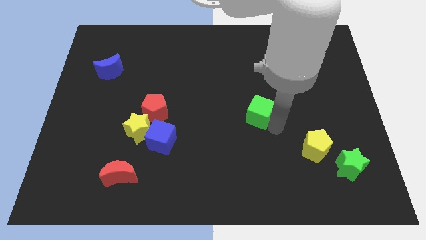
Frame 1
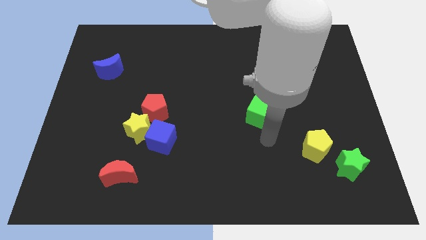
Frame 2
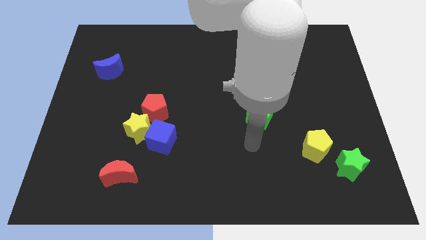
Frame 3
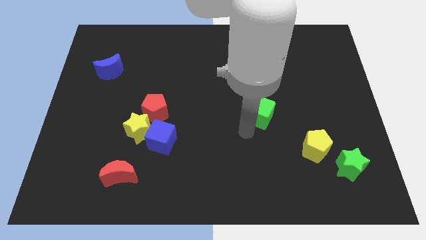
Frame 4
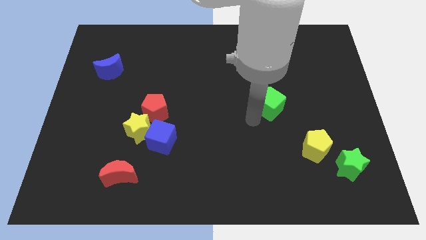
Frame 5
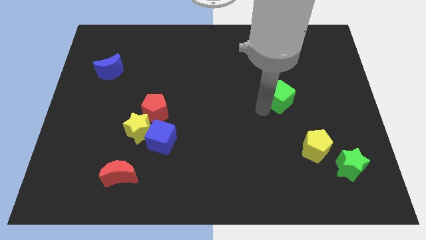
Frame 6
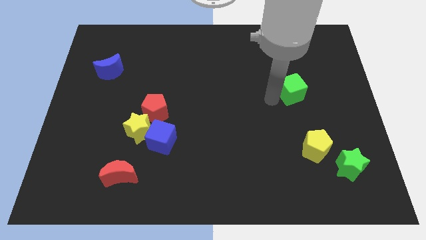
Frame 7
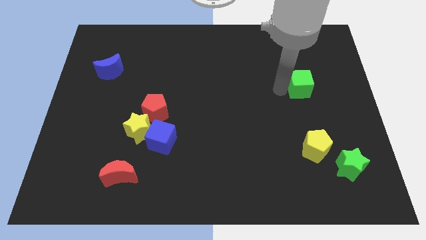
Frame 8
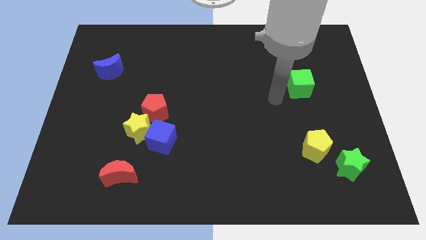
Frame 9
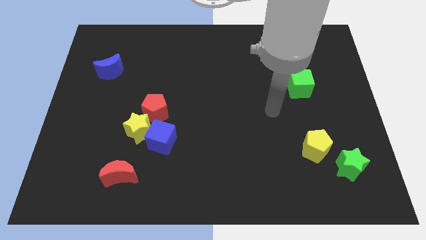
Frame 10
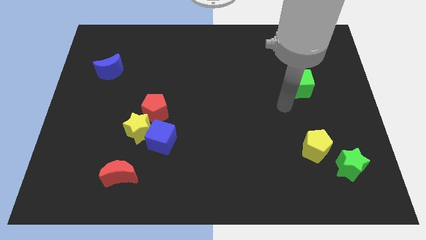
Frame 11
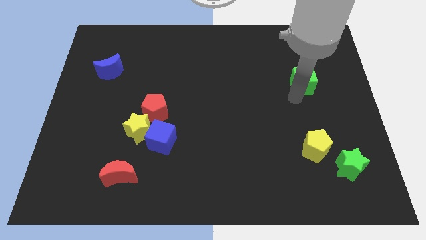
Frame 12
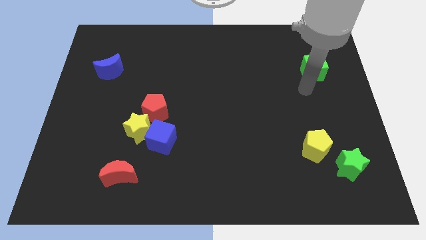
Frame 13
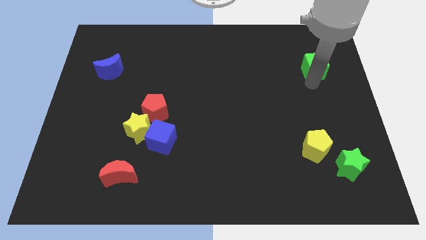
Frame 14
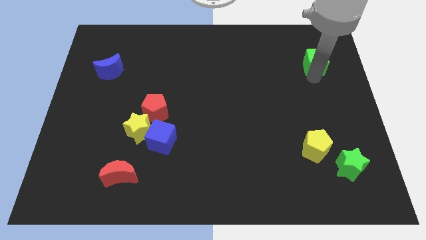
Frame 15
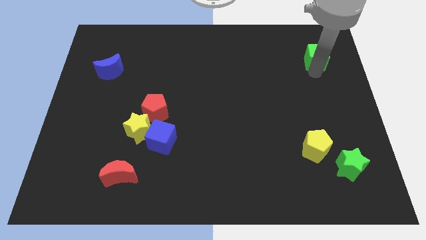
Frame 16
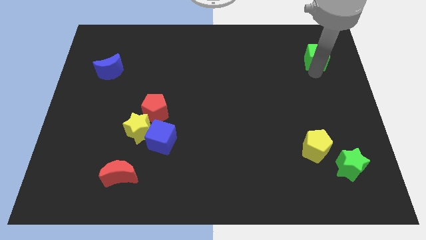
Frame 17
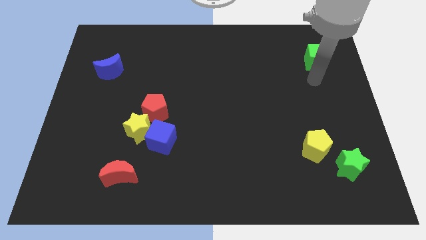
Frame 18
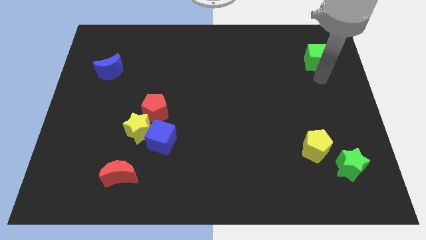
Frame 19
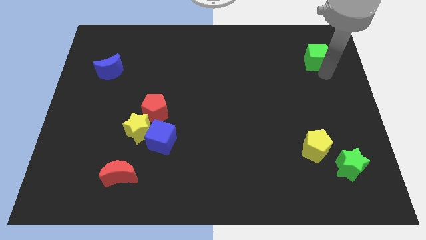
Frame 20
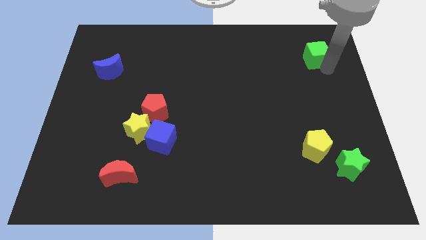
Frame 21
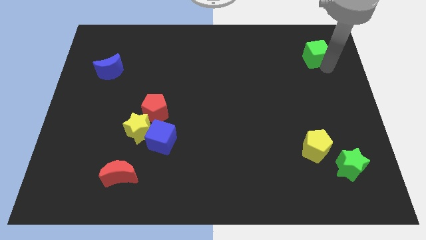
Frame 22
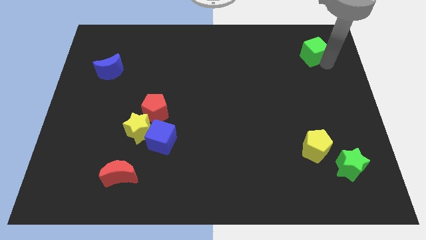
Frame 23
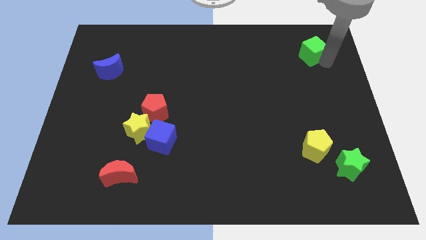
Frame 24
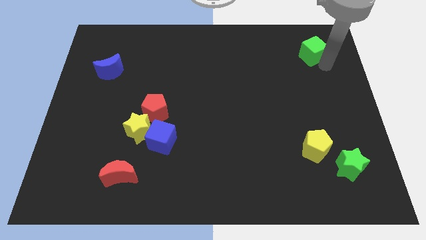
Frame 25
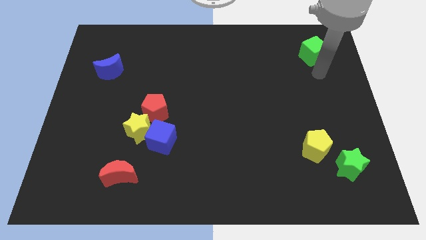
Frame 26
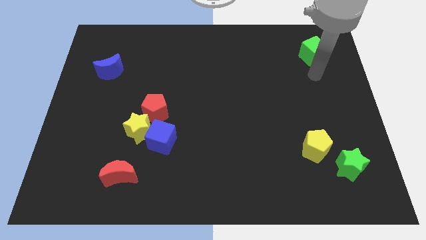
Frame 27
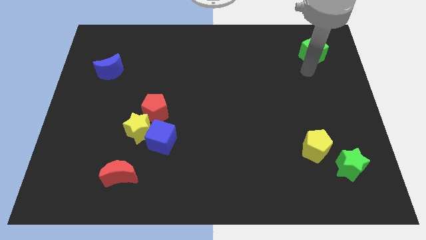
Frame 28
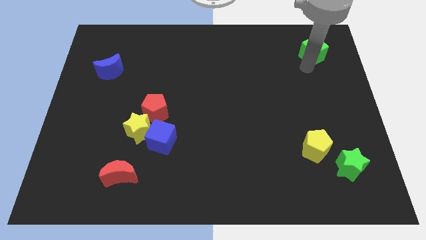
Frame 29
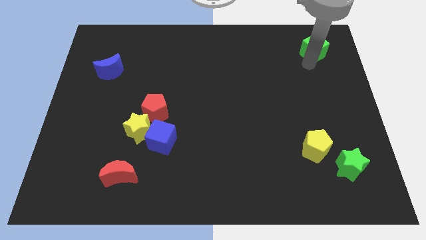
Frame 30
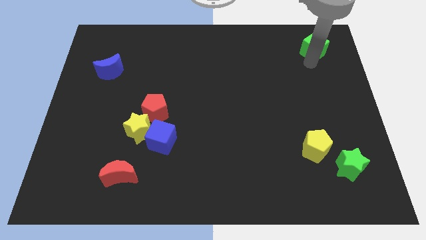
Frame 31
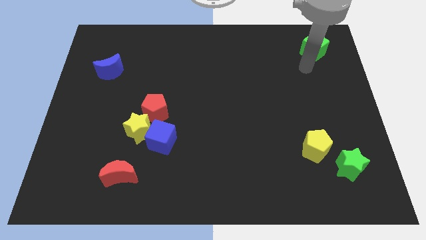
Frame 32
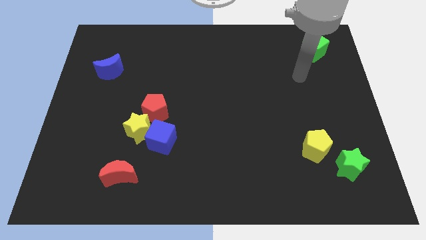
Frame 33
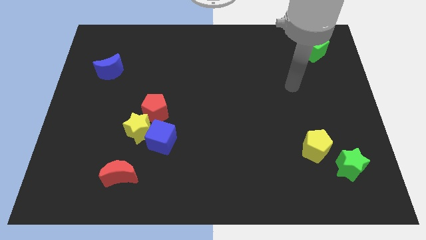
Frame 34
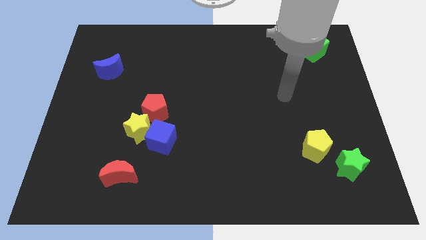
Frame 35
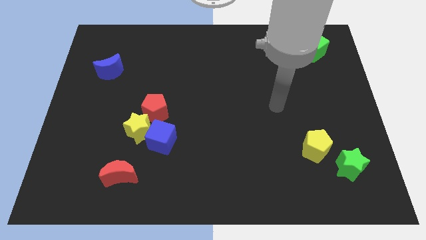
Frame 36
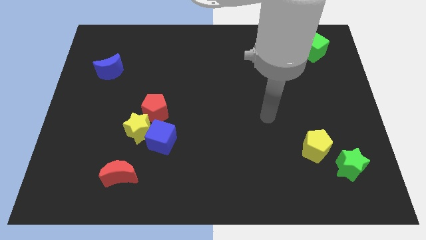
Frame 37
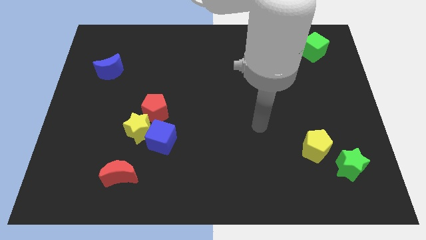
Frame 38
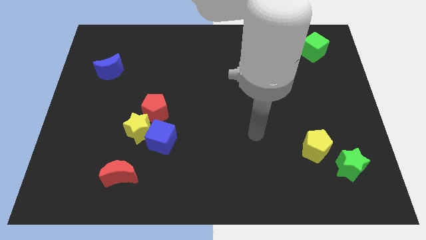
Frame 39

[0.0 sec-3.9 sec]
move the green cube to the top right of the board

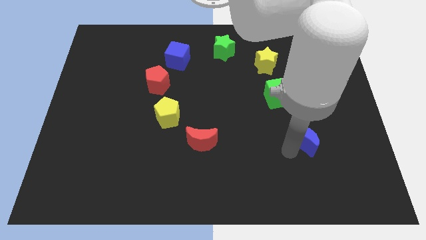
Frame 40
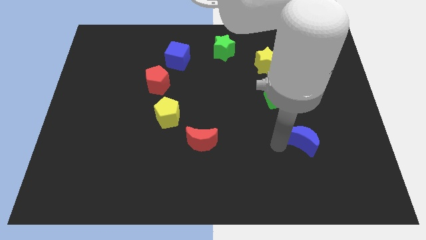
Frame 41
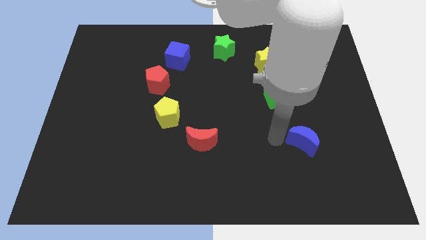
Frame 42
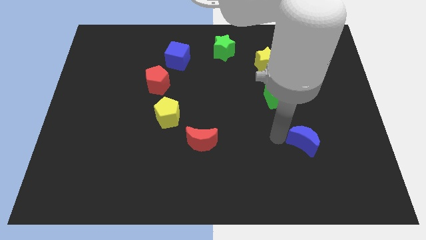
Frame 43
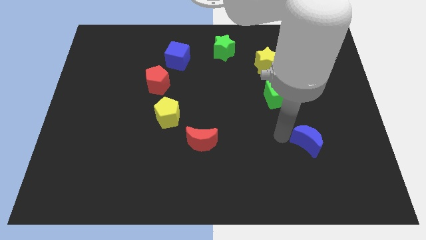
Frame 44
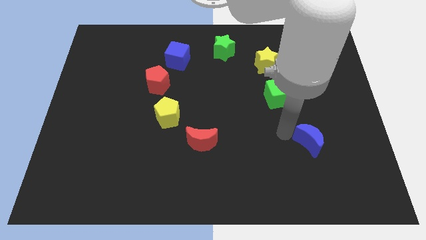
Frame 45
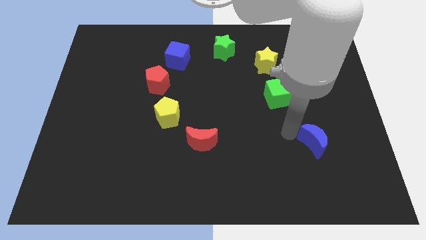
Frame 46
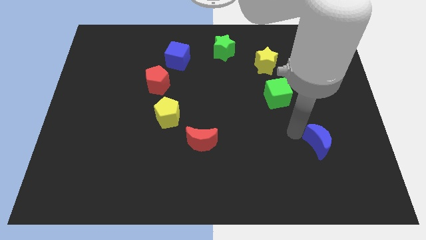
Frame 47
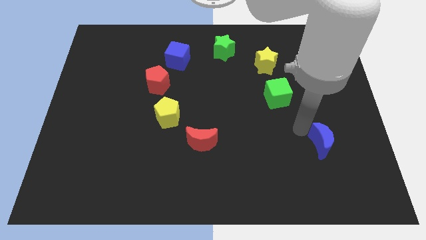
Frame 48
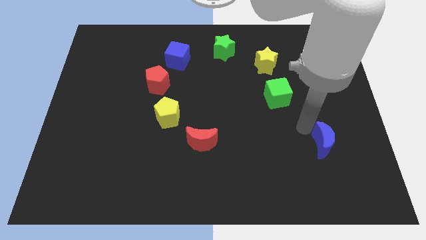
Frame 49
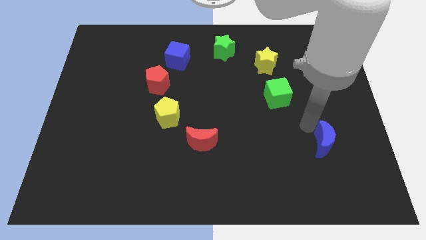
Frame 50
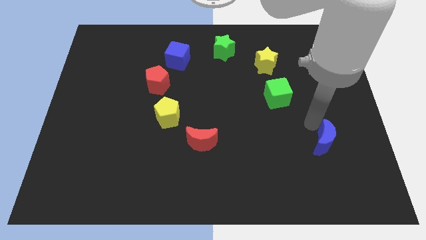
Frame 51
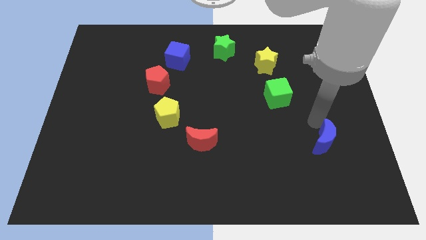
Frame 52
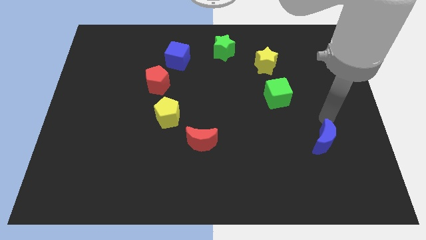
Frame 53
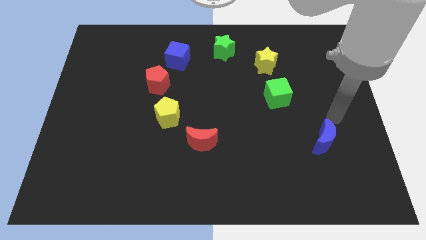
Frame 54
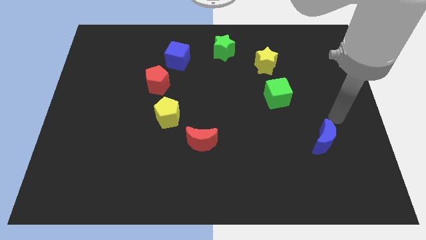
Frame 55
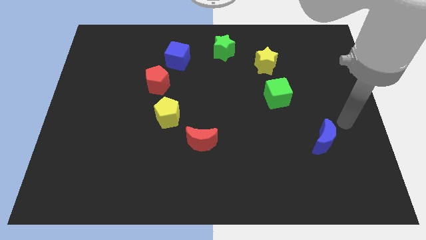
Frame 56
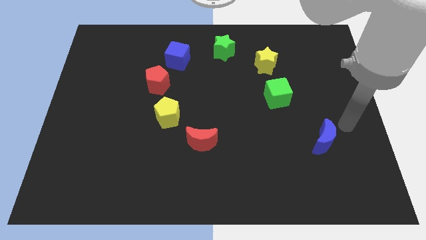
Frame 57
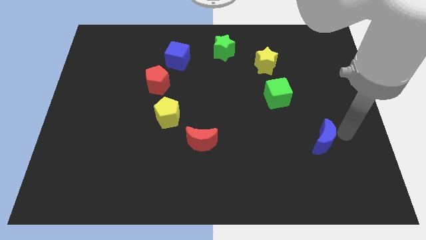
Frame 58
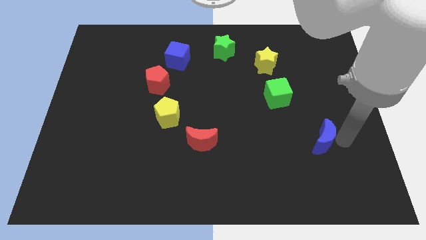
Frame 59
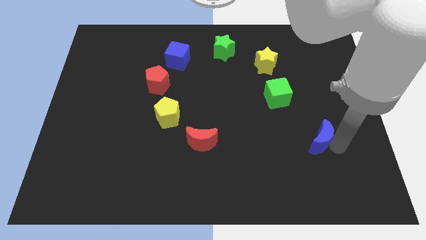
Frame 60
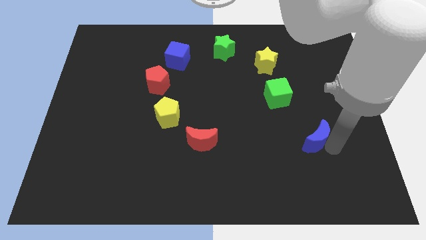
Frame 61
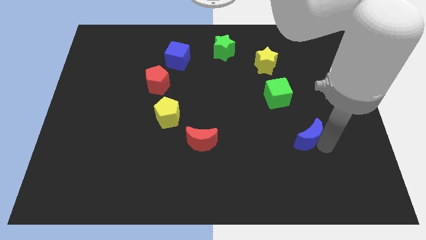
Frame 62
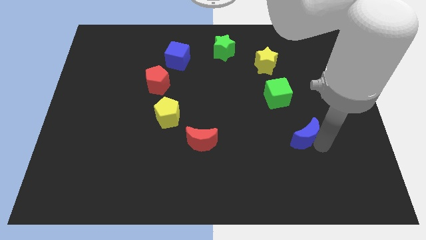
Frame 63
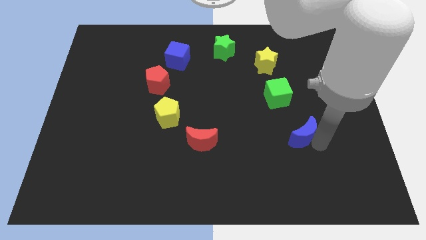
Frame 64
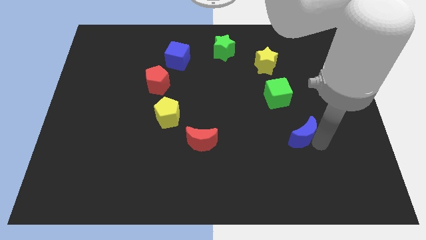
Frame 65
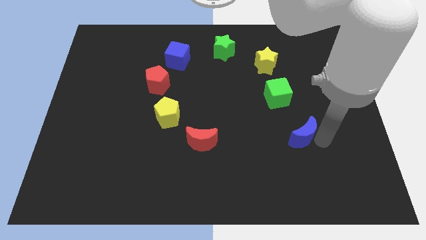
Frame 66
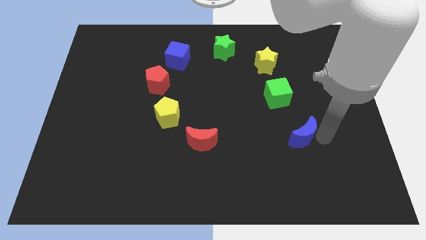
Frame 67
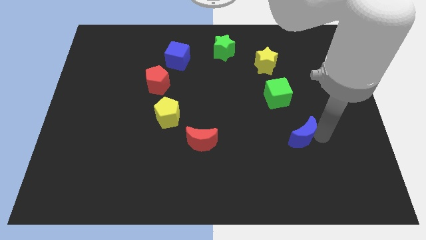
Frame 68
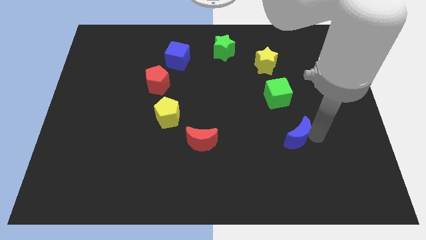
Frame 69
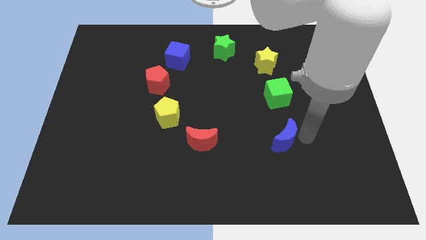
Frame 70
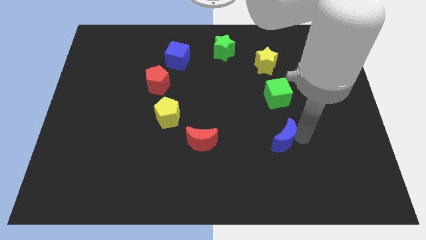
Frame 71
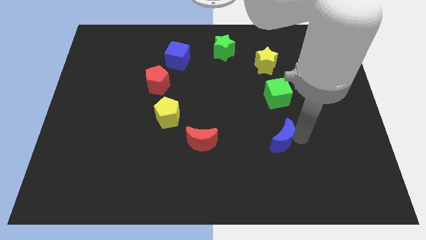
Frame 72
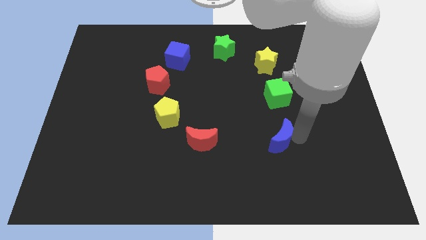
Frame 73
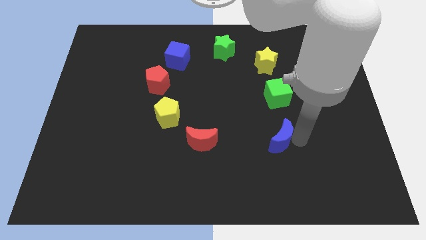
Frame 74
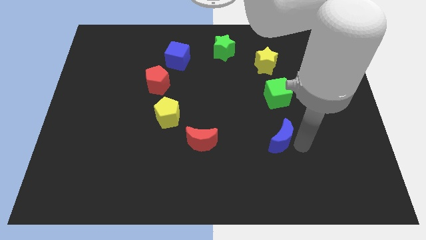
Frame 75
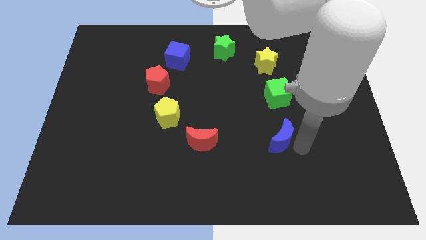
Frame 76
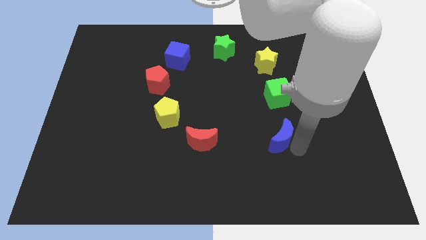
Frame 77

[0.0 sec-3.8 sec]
move the blue crescent below the green cube

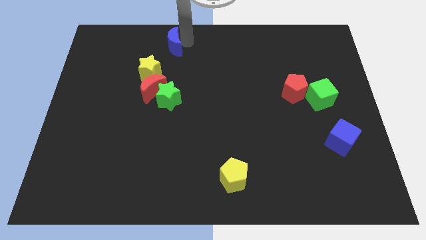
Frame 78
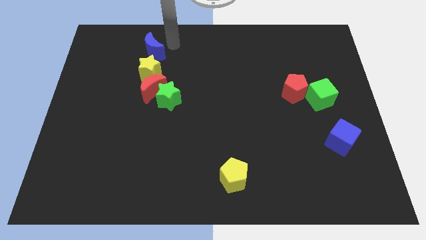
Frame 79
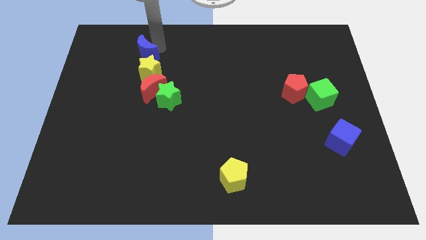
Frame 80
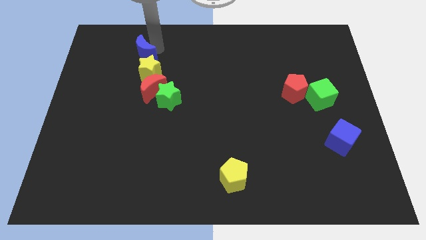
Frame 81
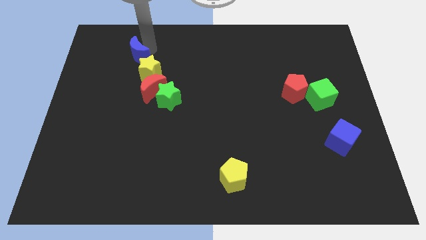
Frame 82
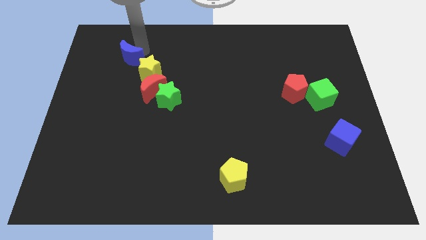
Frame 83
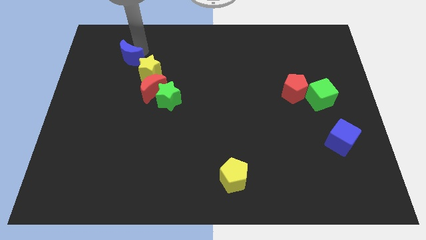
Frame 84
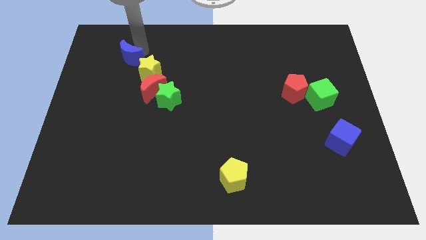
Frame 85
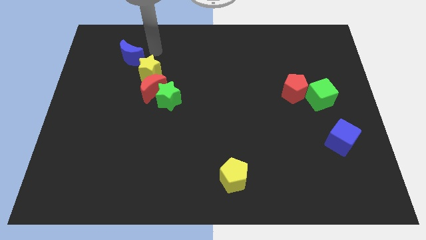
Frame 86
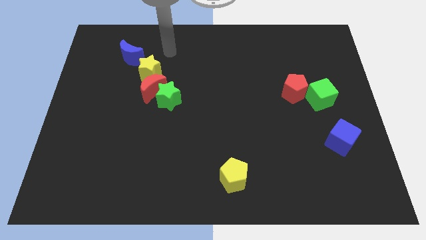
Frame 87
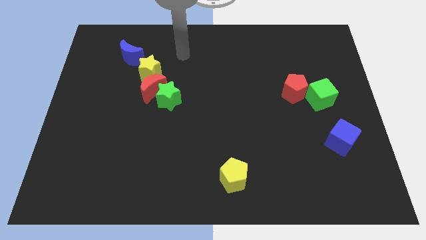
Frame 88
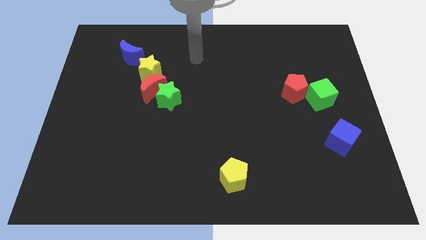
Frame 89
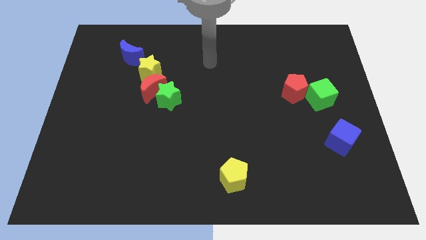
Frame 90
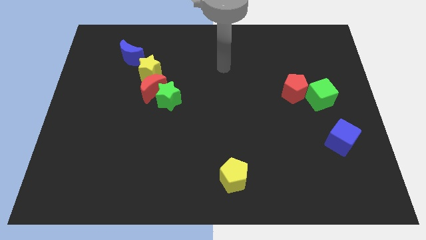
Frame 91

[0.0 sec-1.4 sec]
put the blue moon at the top left side of the yellow star
